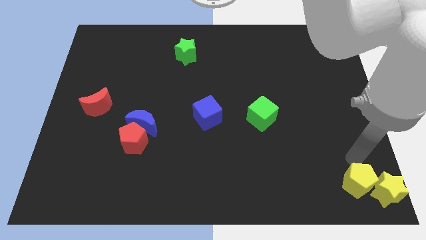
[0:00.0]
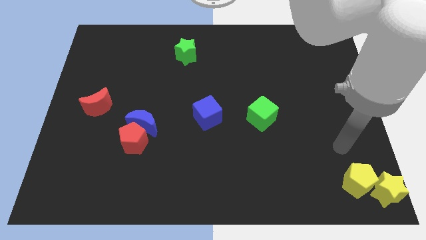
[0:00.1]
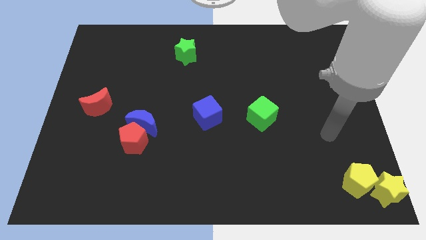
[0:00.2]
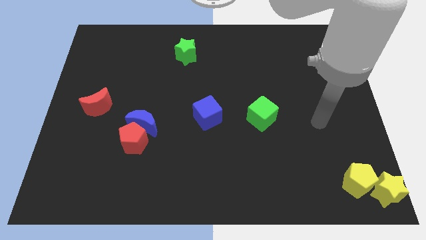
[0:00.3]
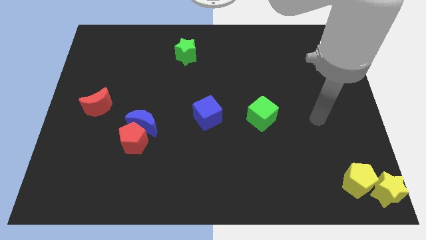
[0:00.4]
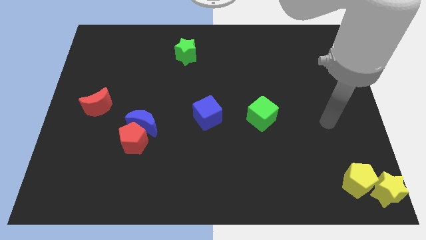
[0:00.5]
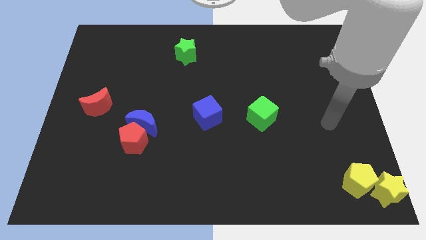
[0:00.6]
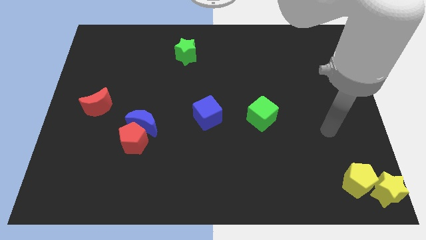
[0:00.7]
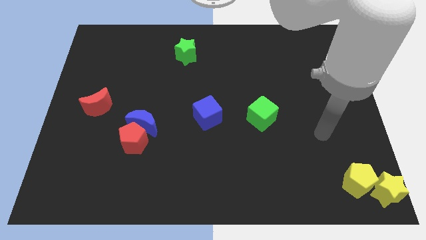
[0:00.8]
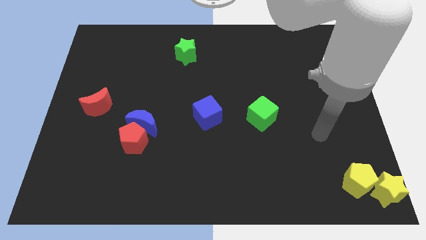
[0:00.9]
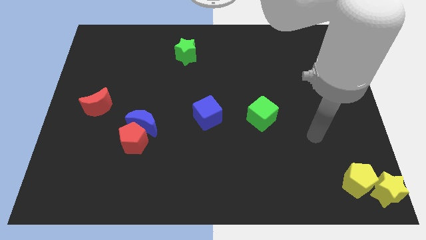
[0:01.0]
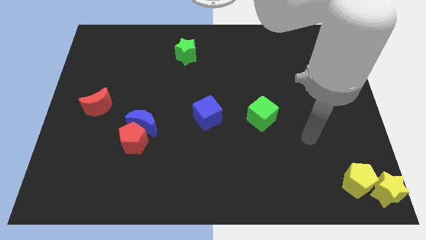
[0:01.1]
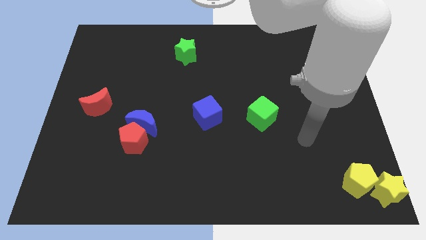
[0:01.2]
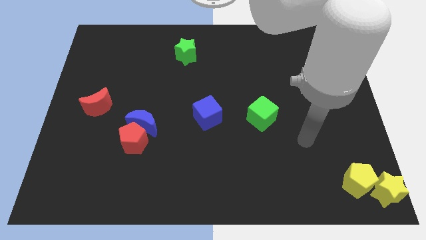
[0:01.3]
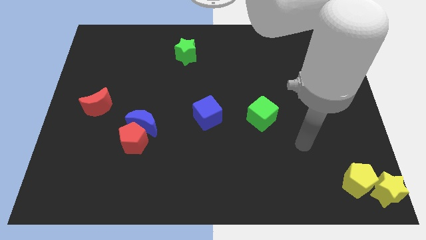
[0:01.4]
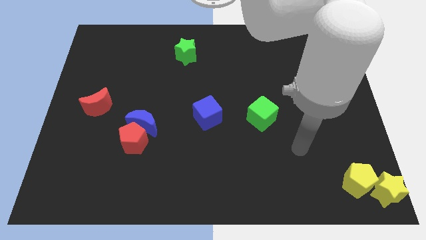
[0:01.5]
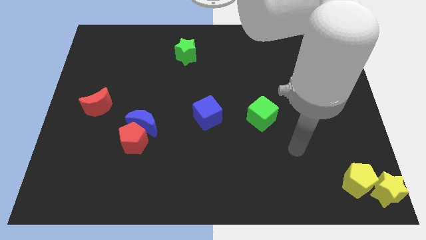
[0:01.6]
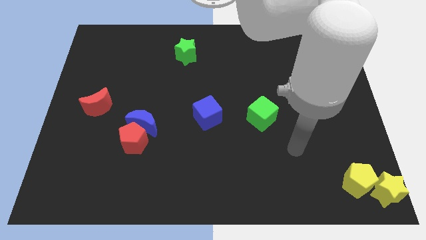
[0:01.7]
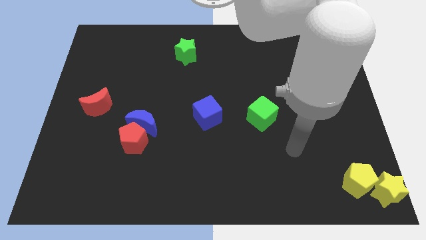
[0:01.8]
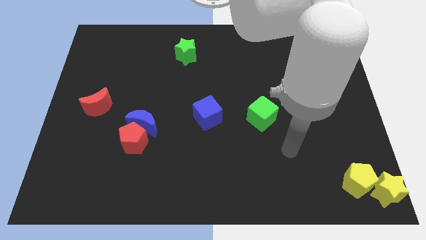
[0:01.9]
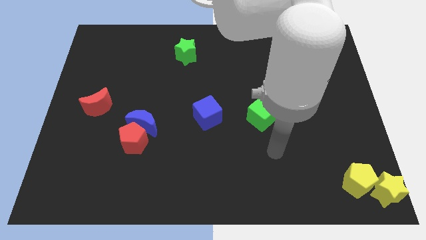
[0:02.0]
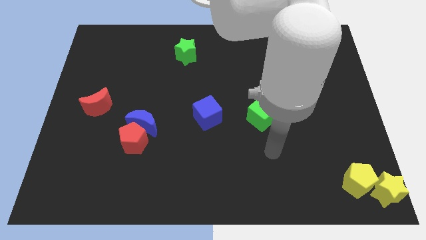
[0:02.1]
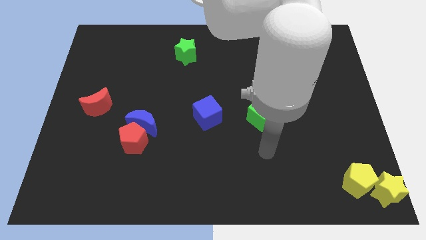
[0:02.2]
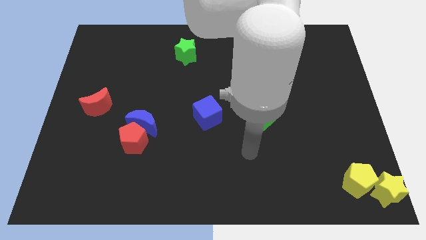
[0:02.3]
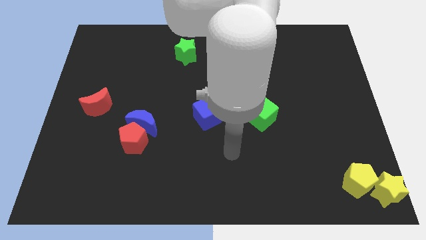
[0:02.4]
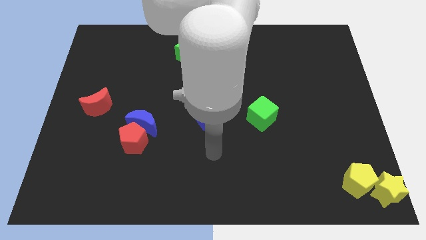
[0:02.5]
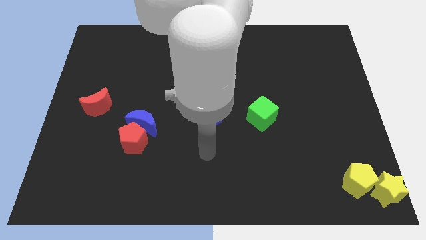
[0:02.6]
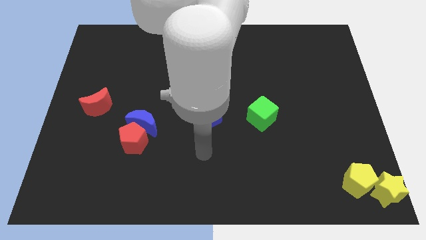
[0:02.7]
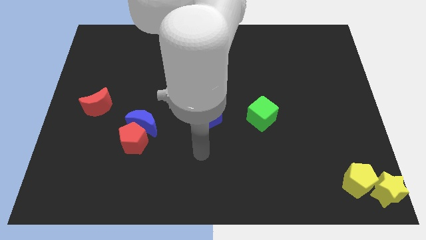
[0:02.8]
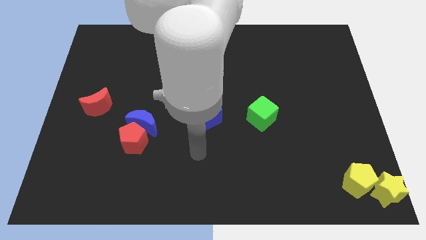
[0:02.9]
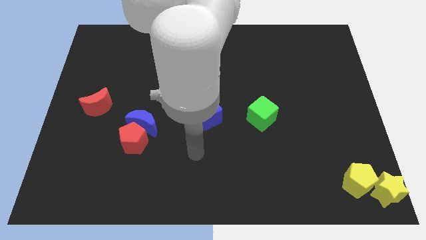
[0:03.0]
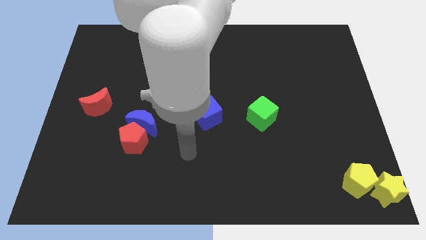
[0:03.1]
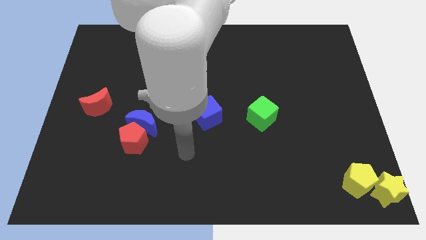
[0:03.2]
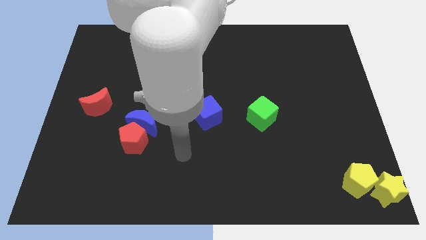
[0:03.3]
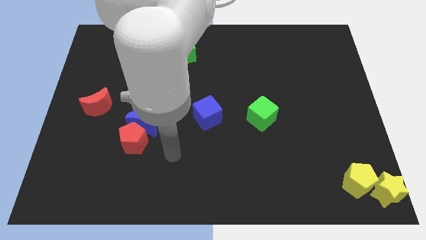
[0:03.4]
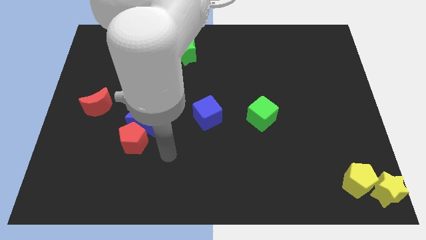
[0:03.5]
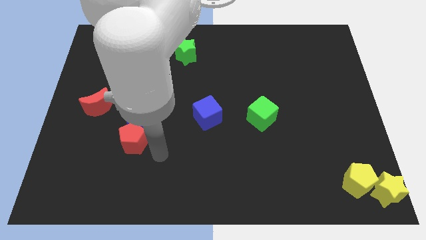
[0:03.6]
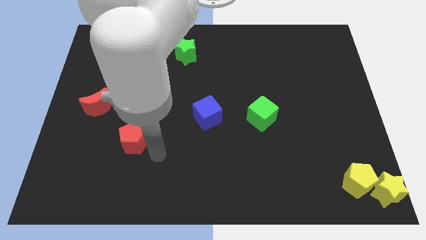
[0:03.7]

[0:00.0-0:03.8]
point the arm to the right of the red pentagon

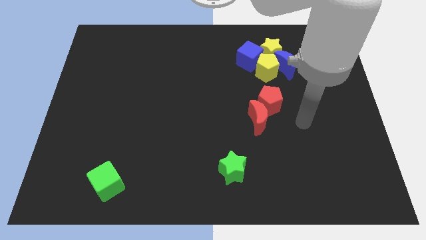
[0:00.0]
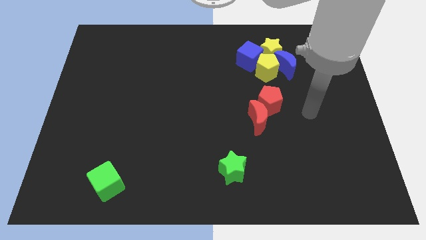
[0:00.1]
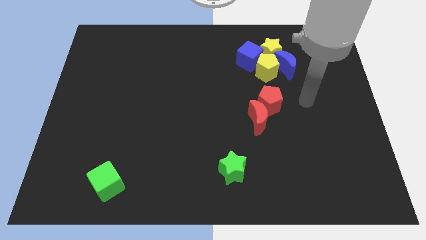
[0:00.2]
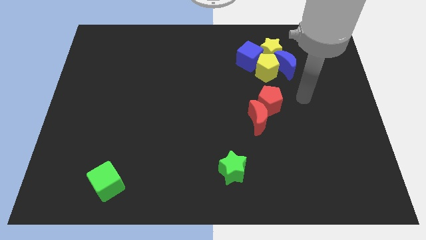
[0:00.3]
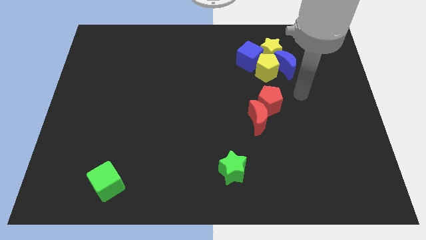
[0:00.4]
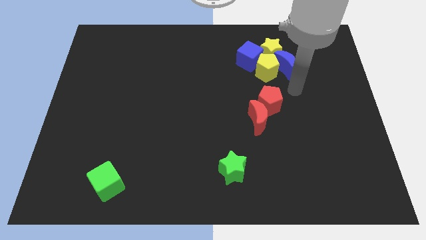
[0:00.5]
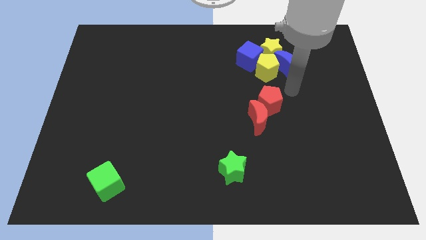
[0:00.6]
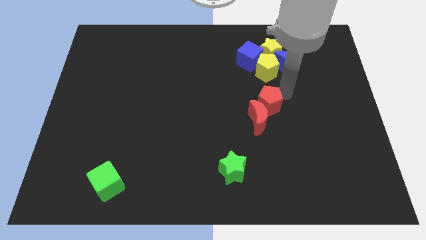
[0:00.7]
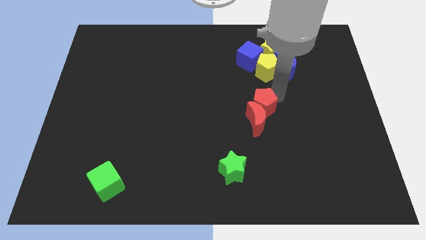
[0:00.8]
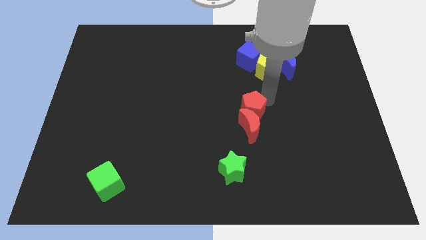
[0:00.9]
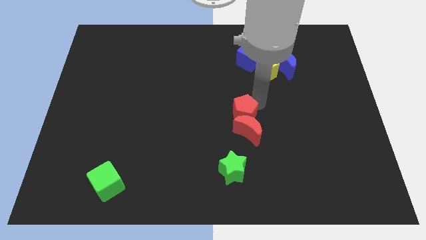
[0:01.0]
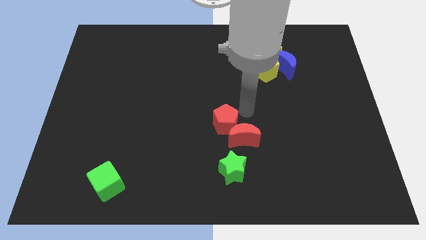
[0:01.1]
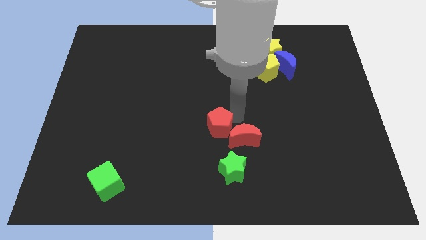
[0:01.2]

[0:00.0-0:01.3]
push red moon with red pentagon

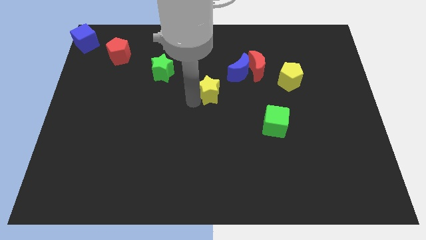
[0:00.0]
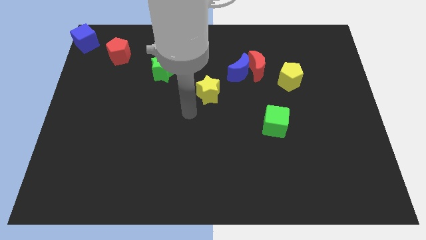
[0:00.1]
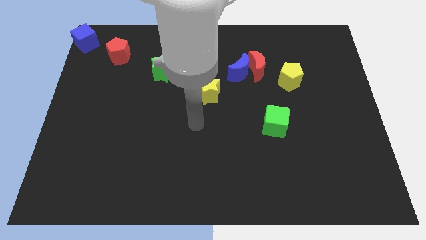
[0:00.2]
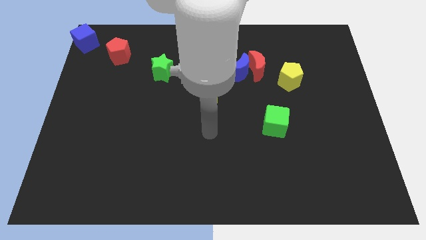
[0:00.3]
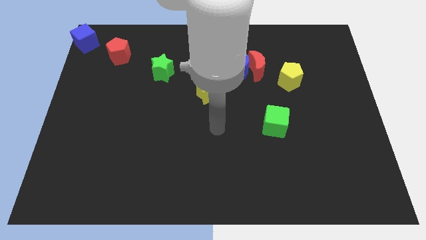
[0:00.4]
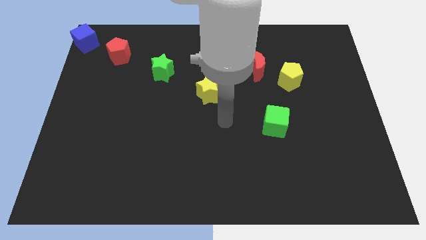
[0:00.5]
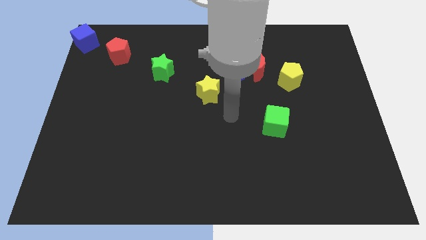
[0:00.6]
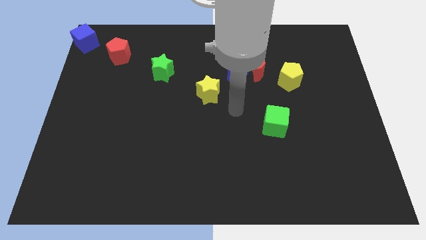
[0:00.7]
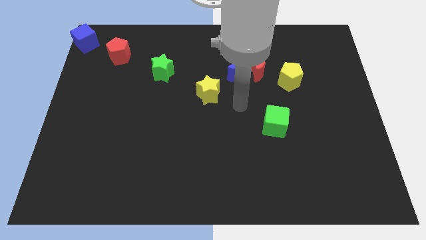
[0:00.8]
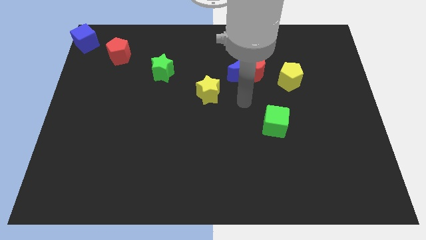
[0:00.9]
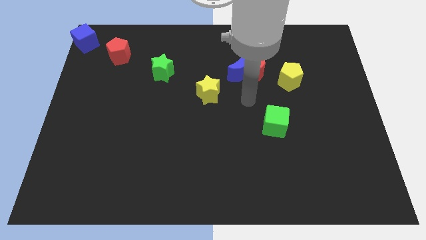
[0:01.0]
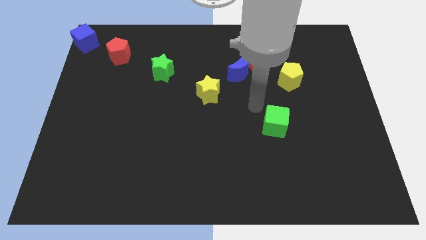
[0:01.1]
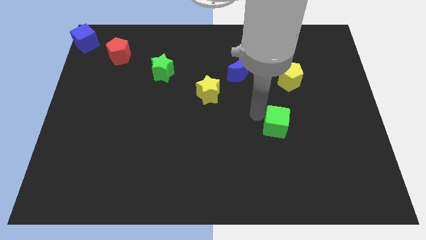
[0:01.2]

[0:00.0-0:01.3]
go and touch the left side of the green cube

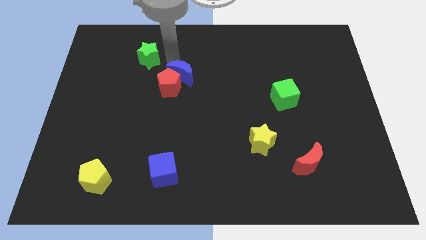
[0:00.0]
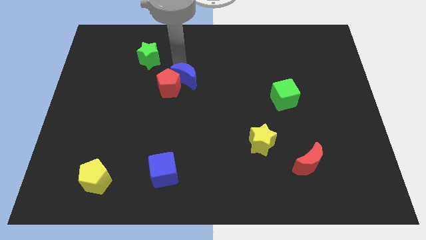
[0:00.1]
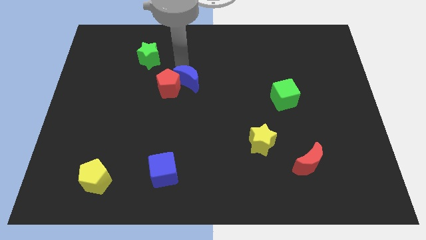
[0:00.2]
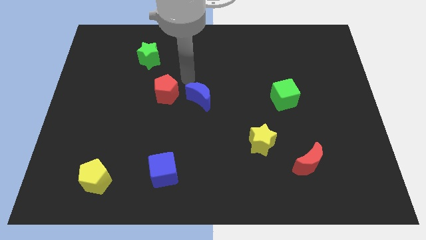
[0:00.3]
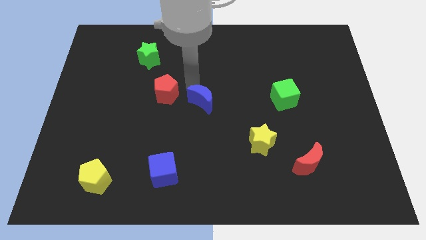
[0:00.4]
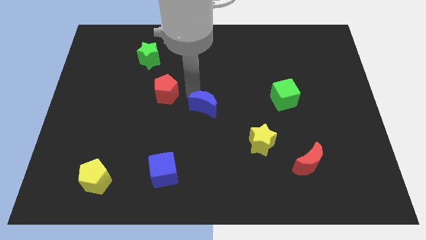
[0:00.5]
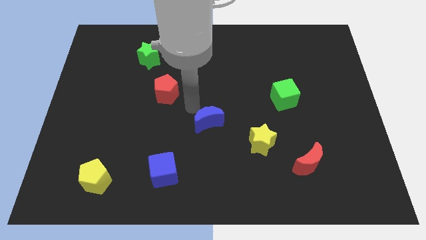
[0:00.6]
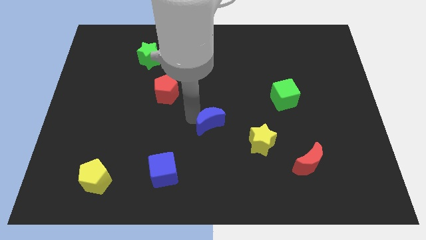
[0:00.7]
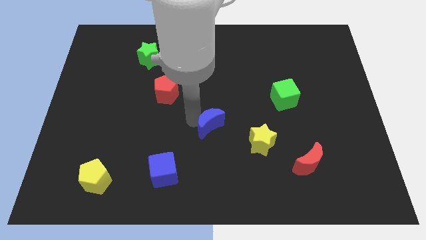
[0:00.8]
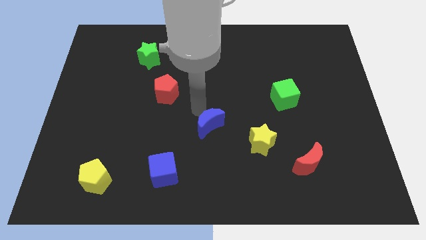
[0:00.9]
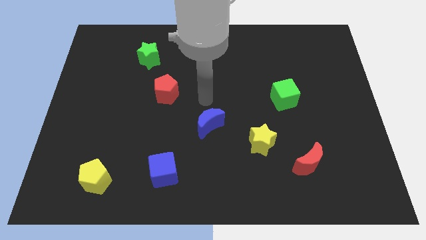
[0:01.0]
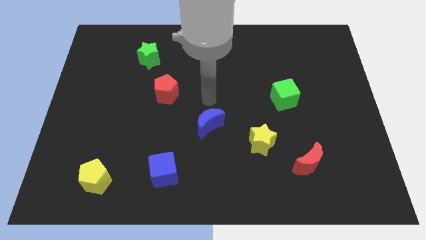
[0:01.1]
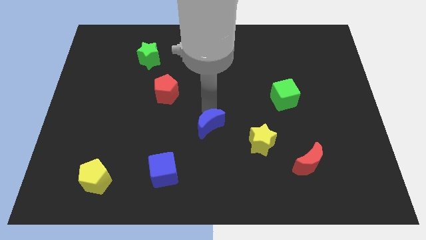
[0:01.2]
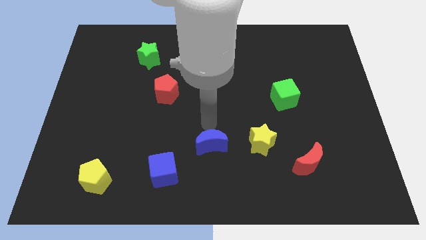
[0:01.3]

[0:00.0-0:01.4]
push the blue moon towards the bottom center

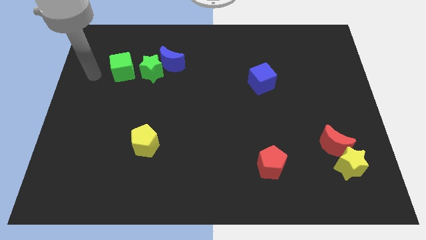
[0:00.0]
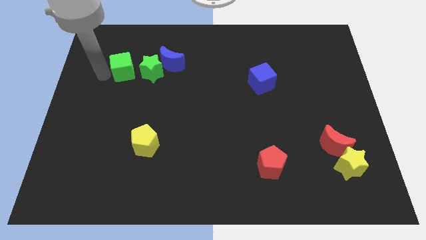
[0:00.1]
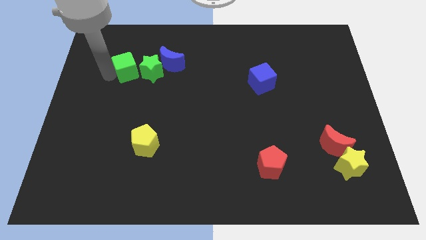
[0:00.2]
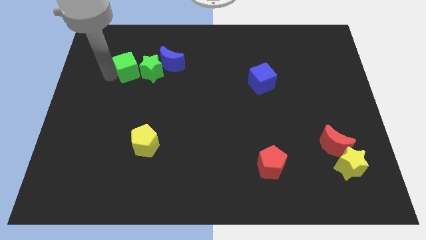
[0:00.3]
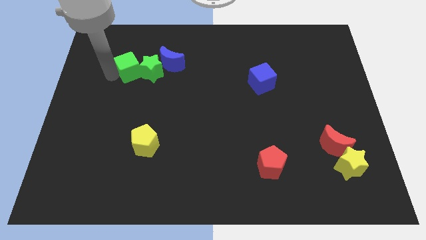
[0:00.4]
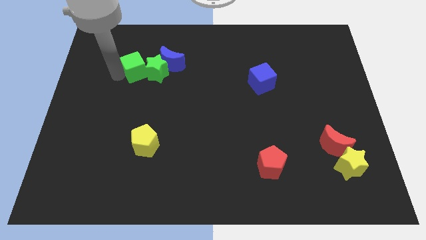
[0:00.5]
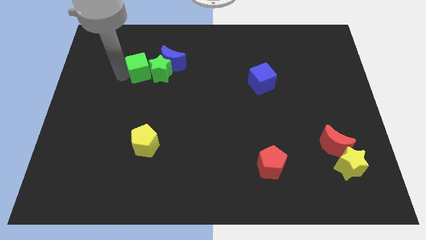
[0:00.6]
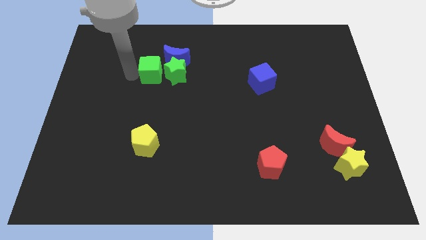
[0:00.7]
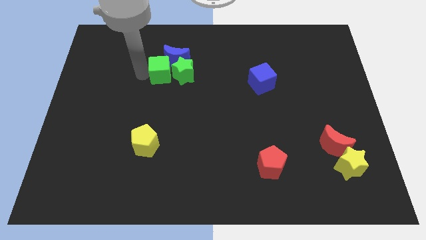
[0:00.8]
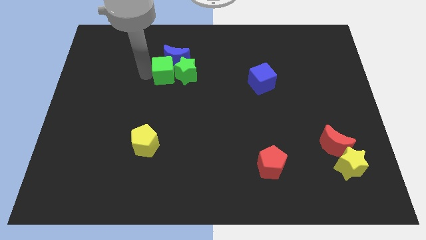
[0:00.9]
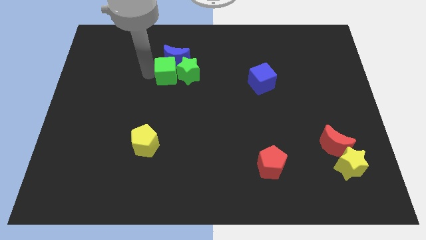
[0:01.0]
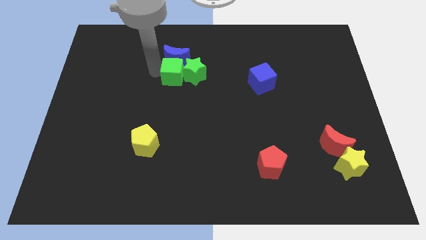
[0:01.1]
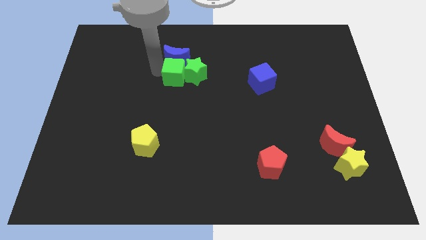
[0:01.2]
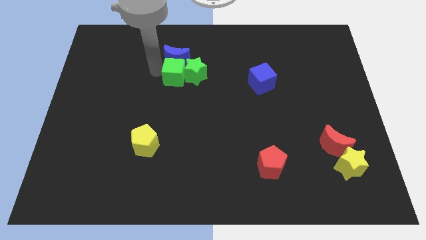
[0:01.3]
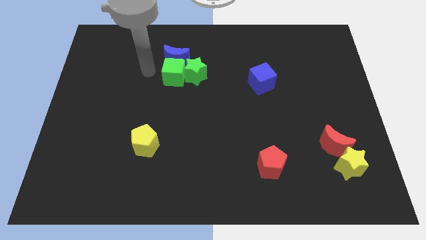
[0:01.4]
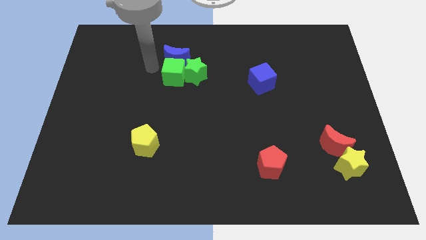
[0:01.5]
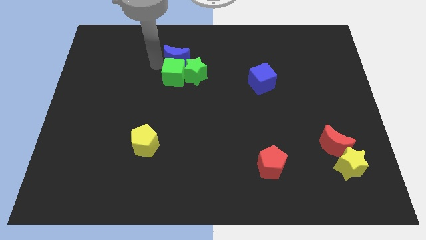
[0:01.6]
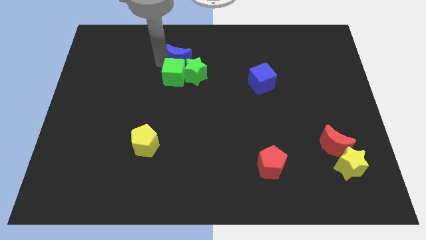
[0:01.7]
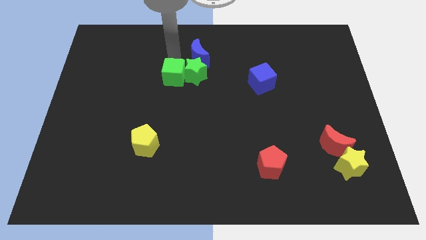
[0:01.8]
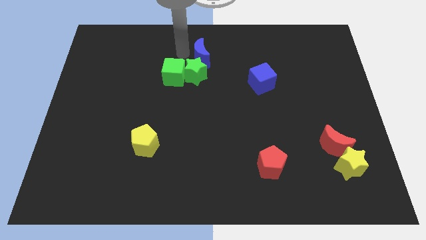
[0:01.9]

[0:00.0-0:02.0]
push the green cube into the green star
